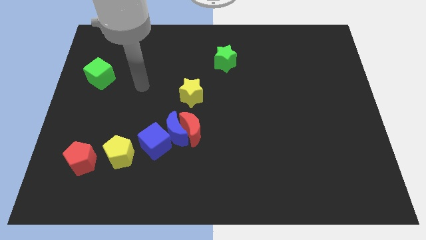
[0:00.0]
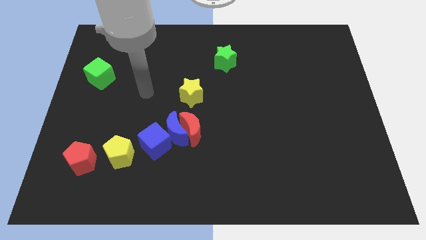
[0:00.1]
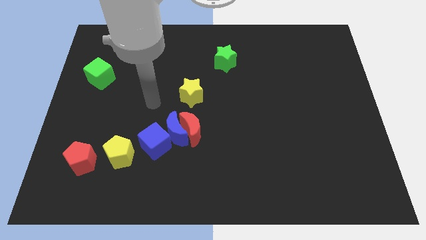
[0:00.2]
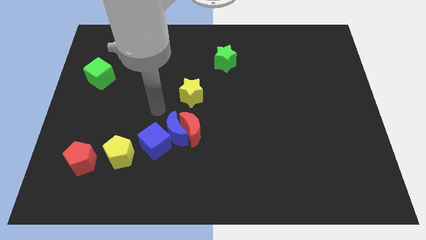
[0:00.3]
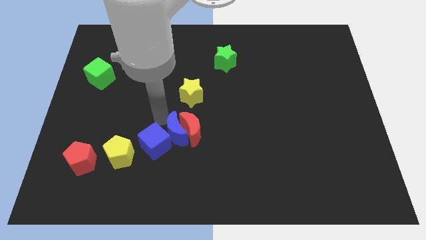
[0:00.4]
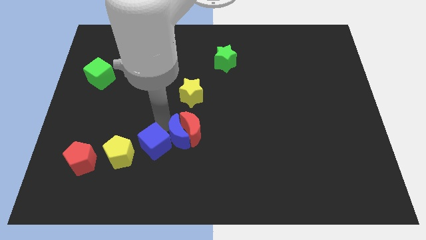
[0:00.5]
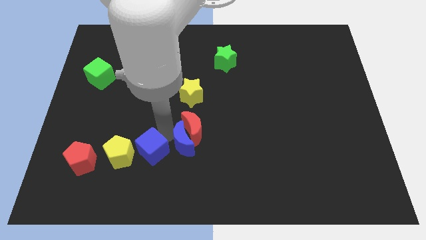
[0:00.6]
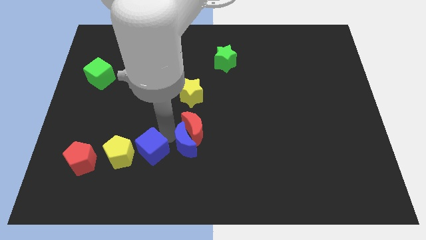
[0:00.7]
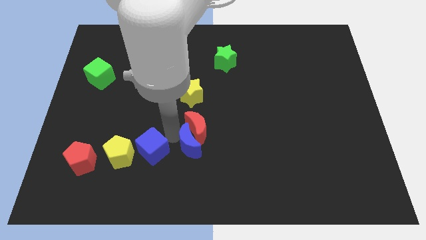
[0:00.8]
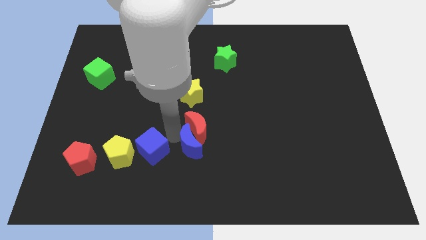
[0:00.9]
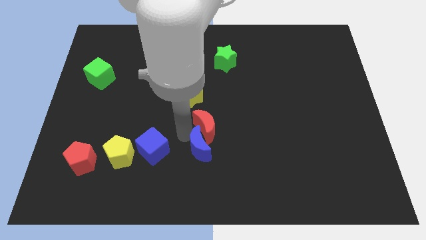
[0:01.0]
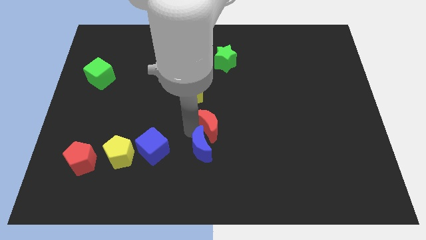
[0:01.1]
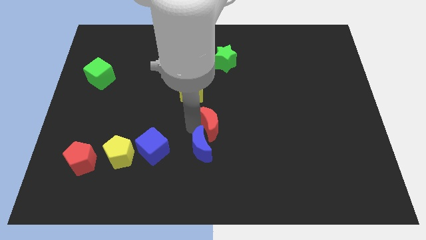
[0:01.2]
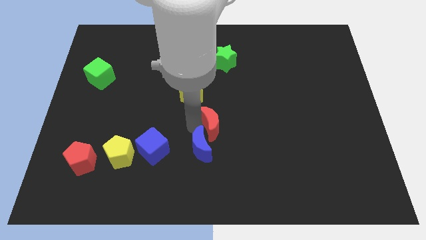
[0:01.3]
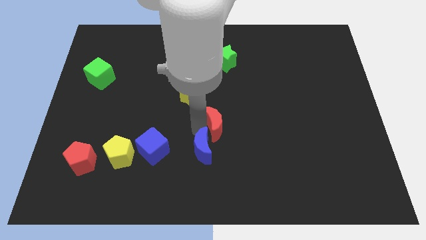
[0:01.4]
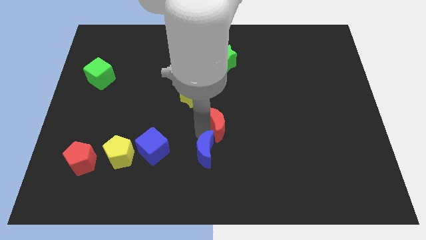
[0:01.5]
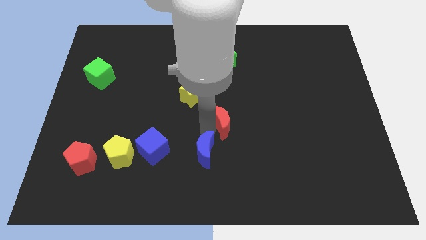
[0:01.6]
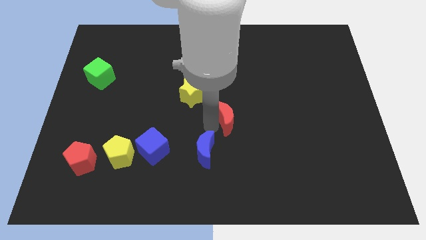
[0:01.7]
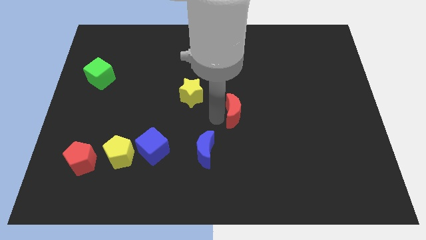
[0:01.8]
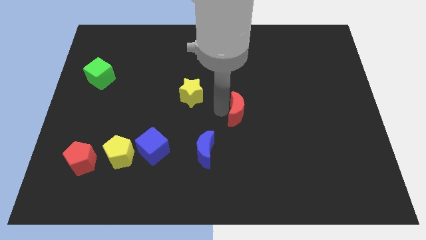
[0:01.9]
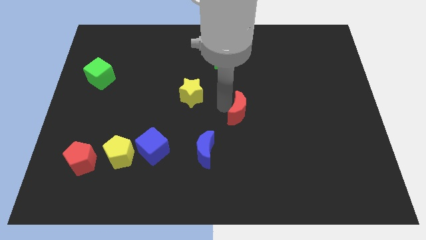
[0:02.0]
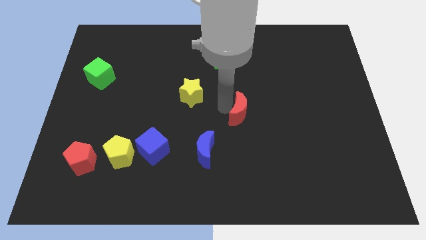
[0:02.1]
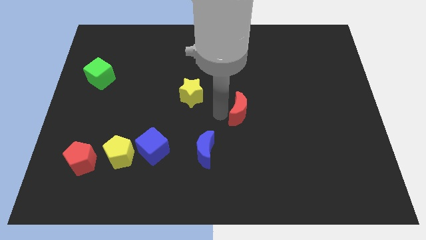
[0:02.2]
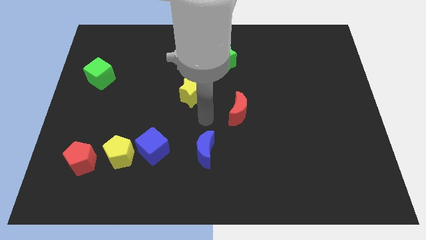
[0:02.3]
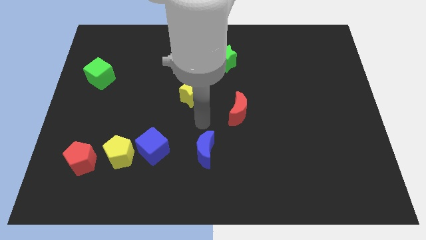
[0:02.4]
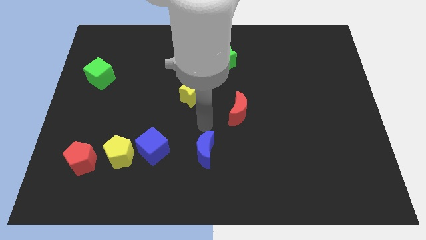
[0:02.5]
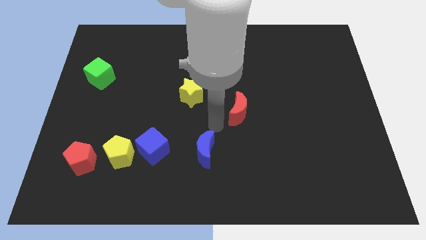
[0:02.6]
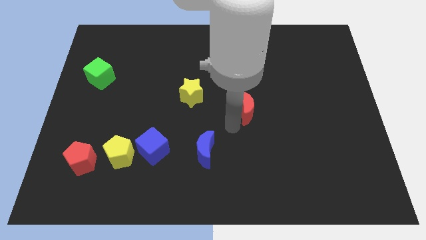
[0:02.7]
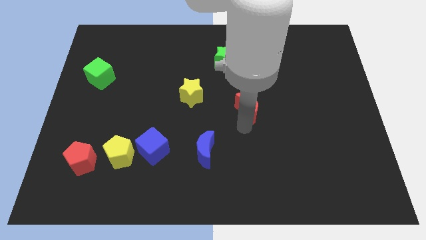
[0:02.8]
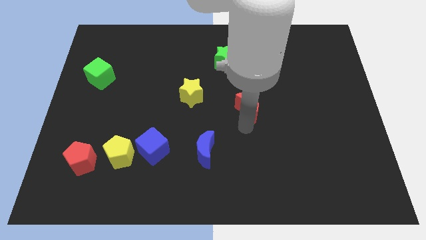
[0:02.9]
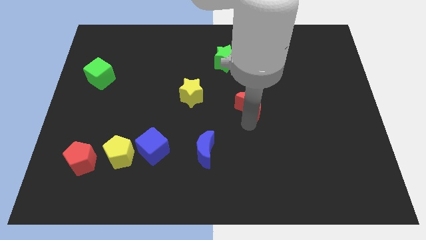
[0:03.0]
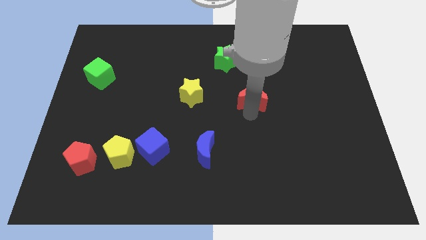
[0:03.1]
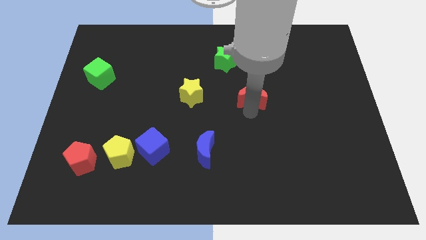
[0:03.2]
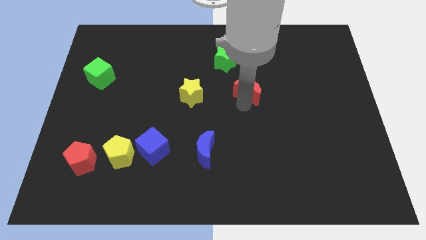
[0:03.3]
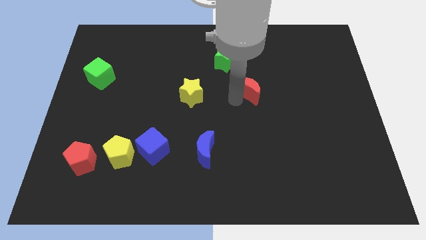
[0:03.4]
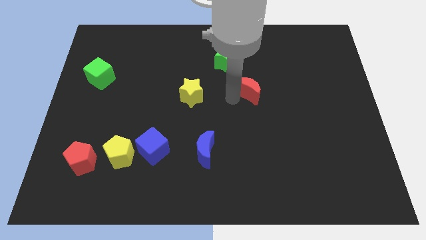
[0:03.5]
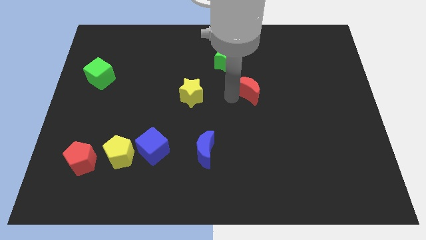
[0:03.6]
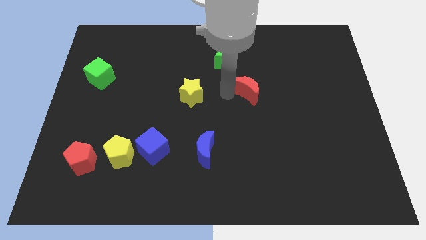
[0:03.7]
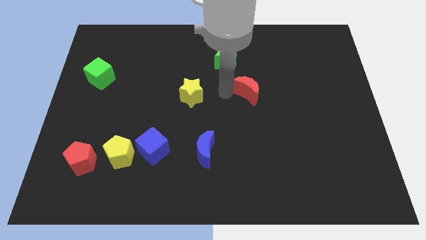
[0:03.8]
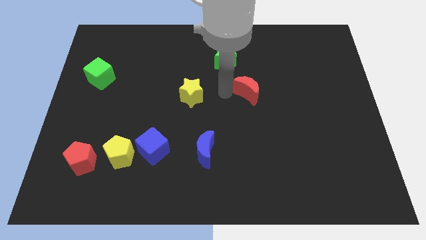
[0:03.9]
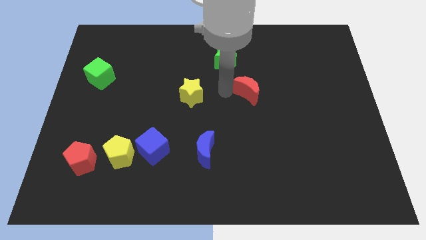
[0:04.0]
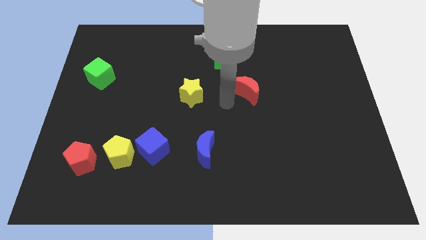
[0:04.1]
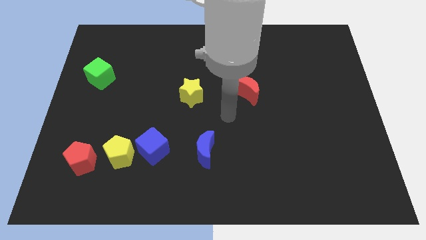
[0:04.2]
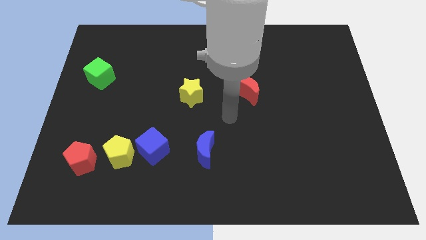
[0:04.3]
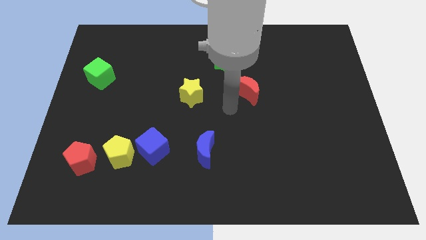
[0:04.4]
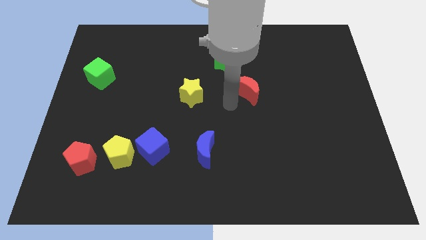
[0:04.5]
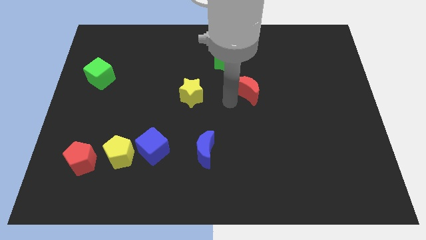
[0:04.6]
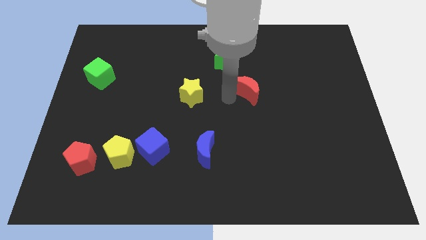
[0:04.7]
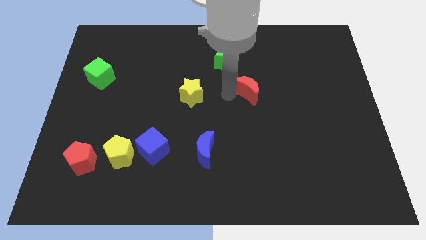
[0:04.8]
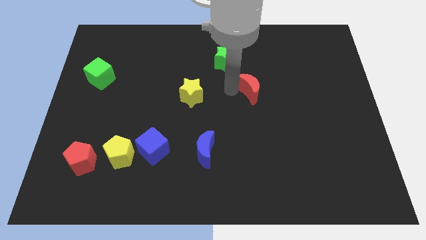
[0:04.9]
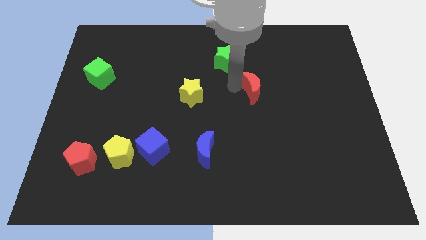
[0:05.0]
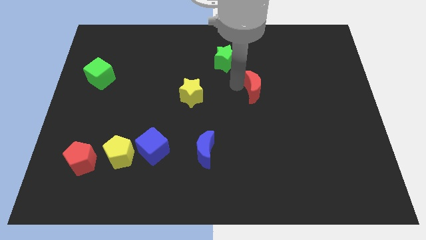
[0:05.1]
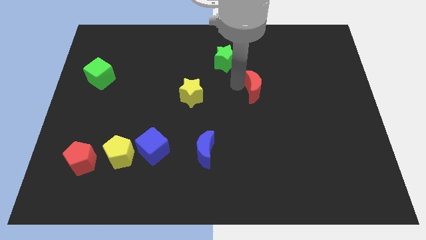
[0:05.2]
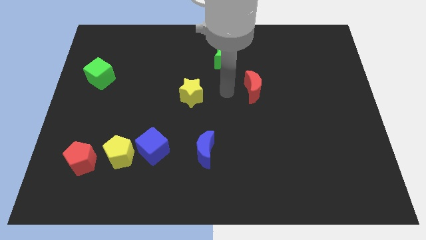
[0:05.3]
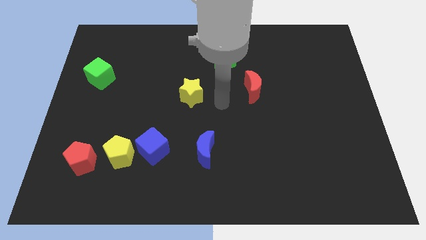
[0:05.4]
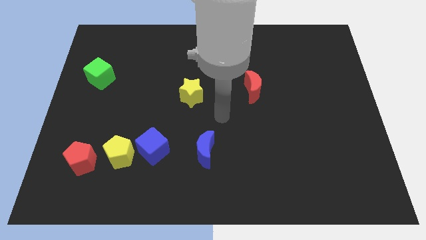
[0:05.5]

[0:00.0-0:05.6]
place the red crescent parallel to the yellow star

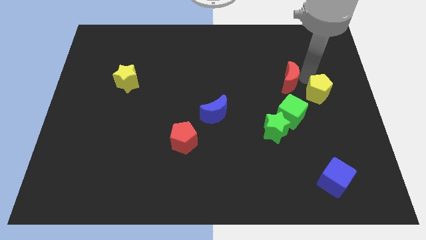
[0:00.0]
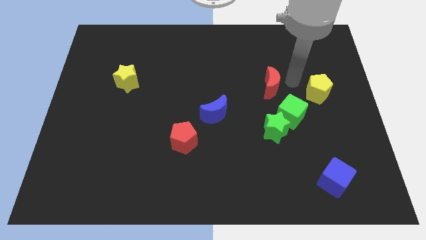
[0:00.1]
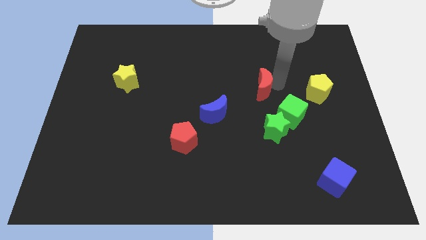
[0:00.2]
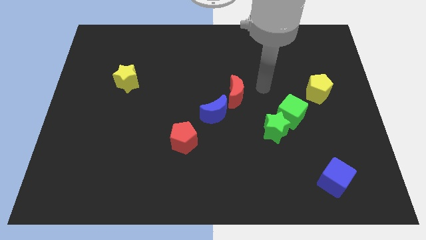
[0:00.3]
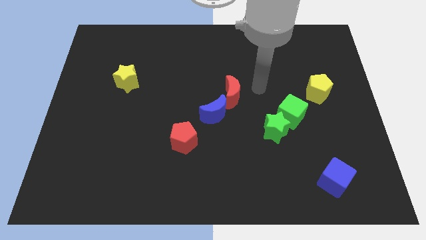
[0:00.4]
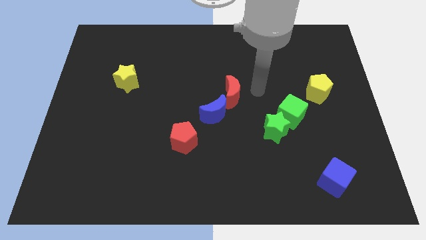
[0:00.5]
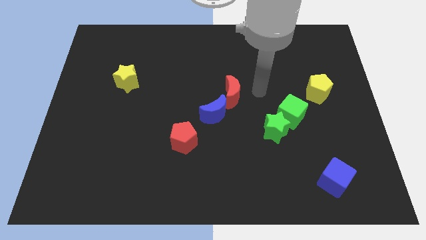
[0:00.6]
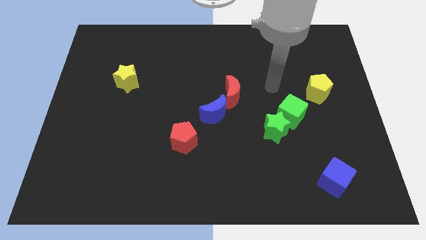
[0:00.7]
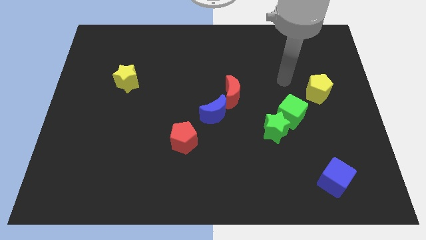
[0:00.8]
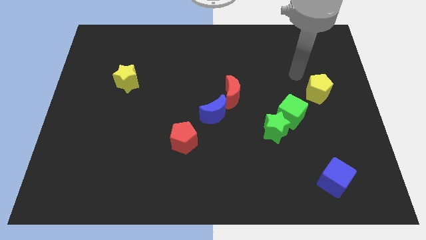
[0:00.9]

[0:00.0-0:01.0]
push the red crescent into the blue crescent

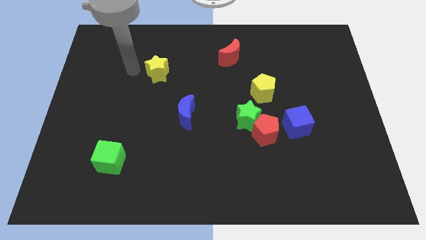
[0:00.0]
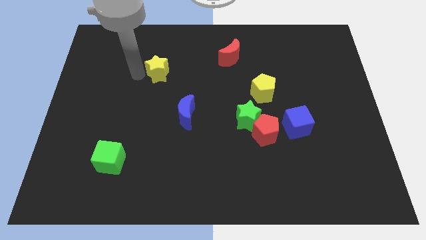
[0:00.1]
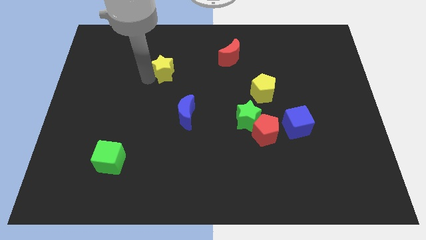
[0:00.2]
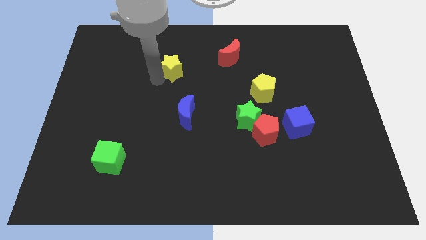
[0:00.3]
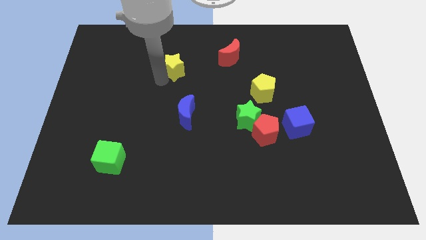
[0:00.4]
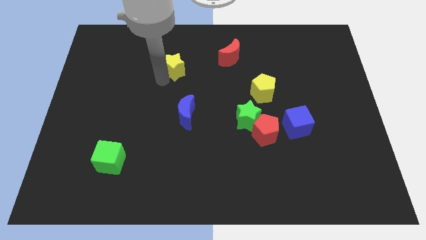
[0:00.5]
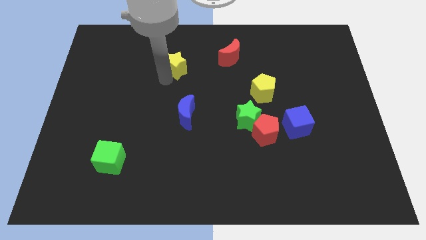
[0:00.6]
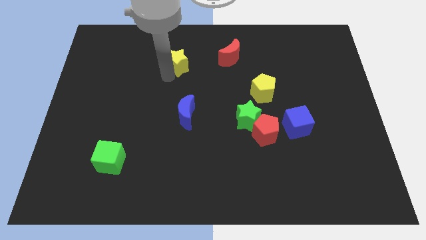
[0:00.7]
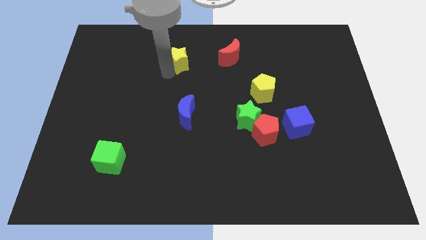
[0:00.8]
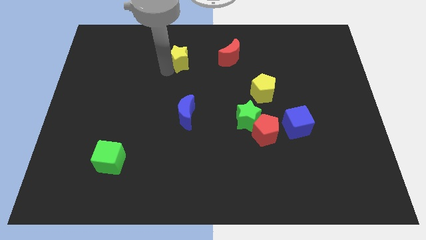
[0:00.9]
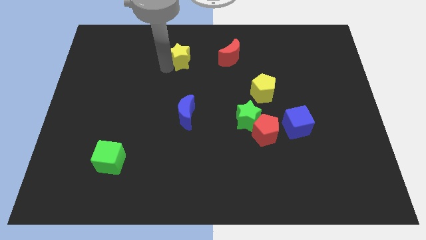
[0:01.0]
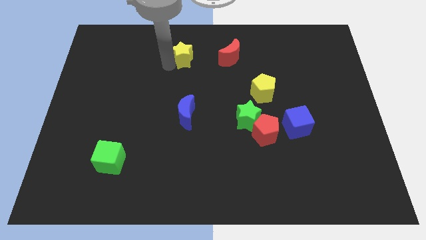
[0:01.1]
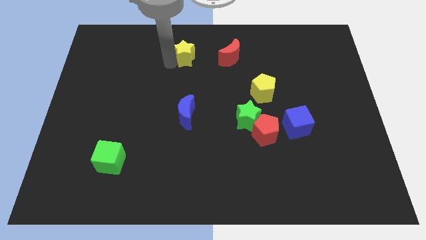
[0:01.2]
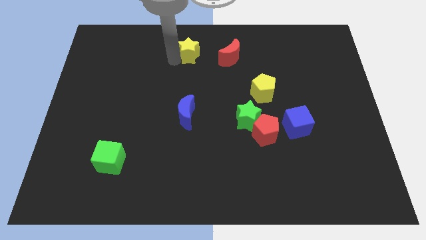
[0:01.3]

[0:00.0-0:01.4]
place the yellow star vertically above the blue moon

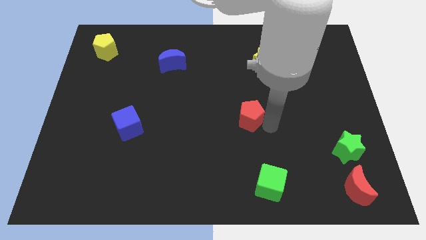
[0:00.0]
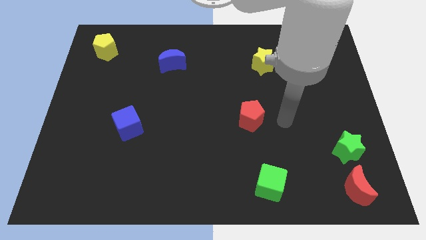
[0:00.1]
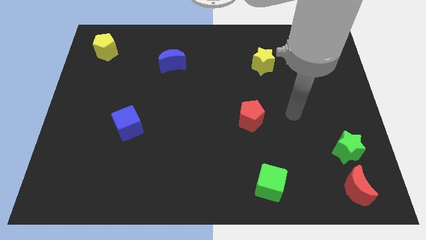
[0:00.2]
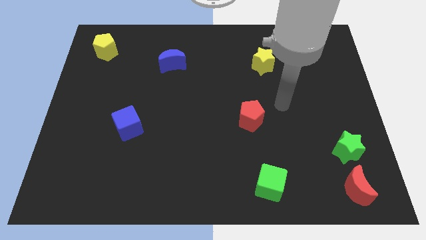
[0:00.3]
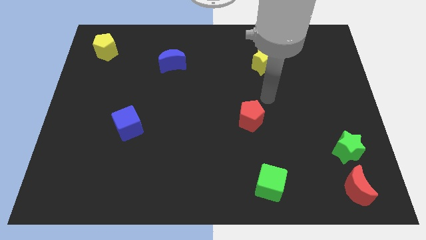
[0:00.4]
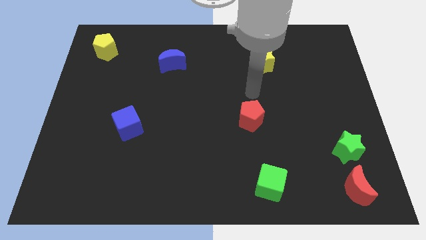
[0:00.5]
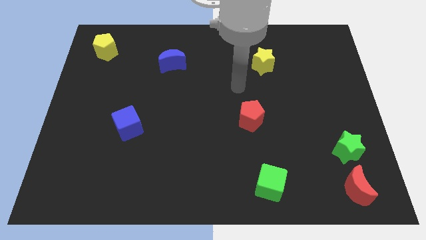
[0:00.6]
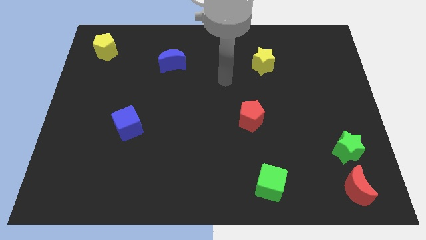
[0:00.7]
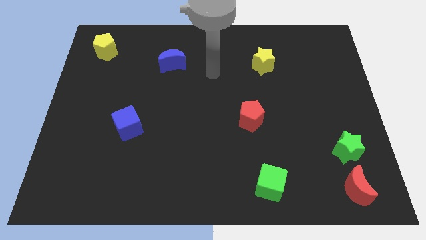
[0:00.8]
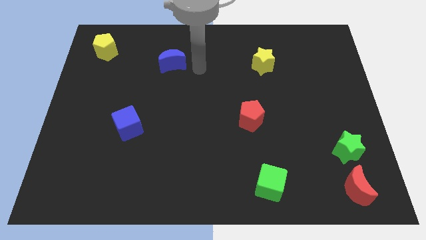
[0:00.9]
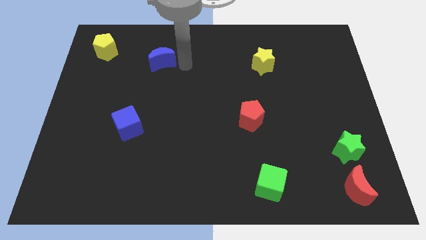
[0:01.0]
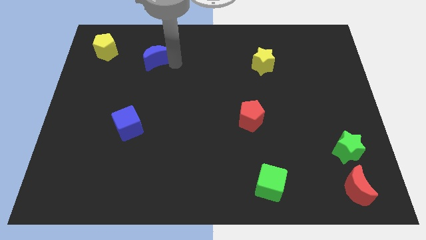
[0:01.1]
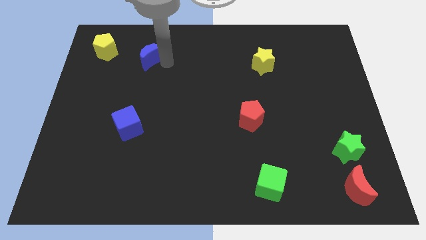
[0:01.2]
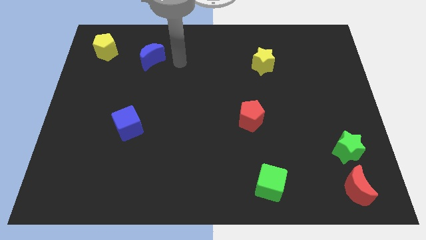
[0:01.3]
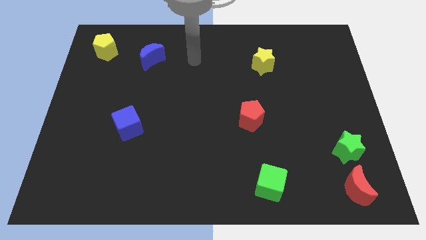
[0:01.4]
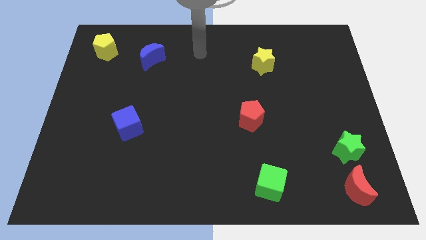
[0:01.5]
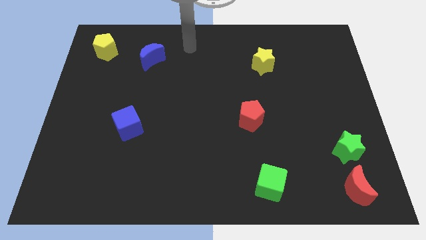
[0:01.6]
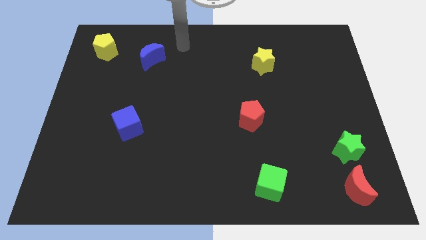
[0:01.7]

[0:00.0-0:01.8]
push blue moon towards yellow pentagon
